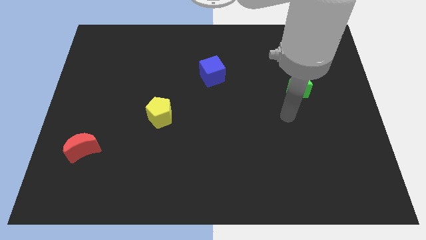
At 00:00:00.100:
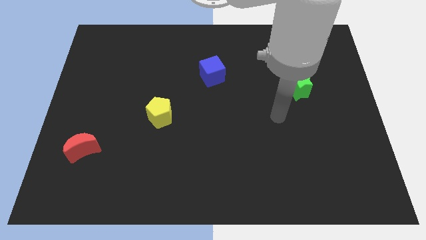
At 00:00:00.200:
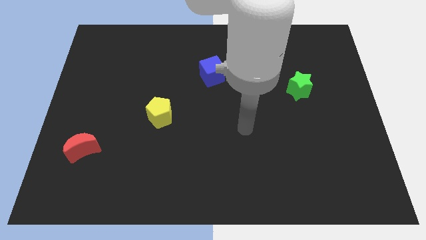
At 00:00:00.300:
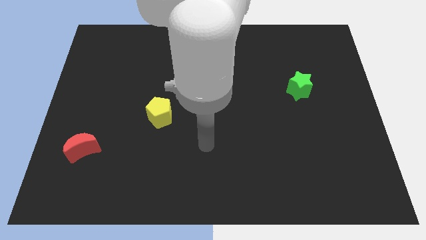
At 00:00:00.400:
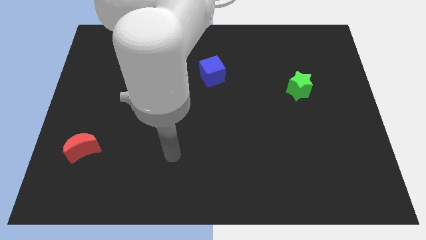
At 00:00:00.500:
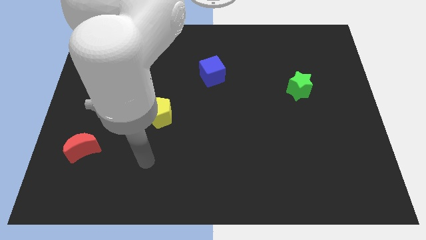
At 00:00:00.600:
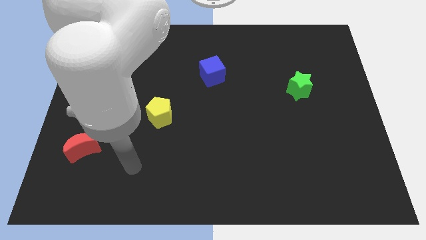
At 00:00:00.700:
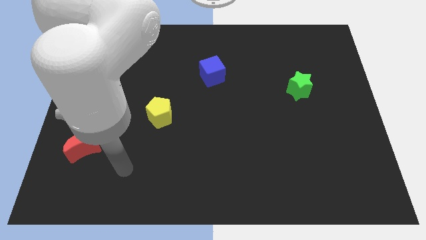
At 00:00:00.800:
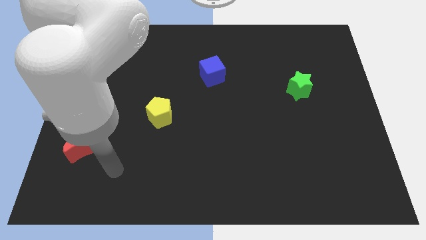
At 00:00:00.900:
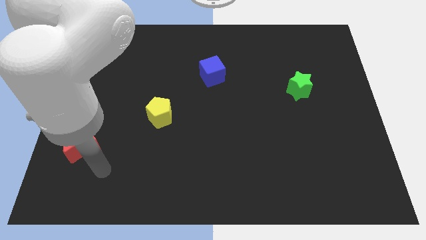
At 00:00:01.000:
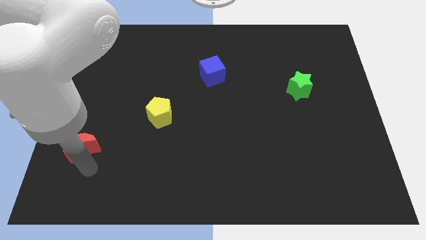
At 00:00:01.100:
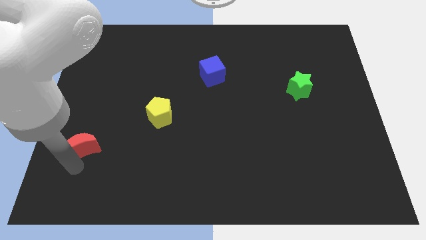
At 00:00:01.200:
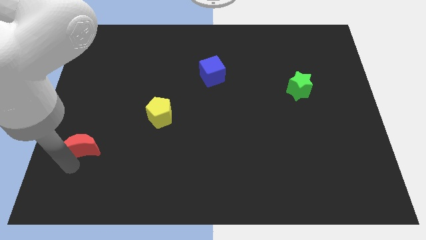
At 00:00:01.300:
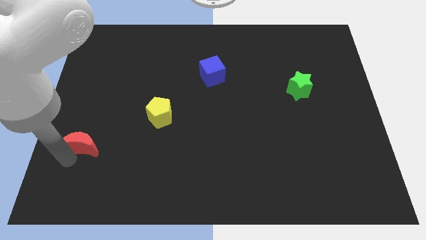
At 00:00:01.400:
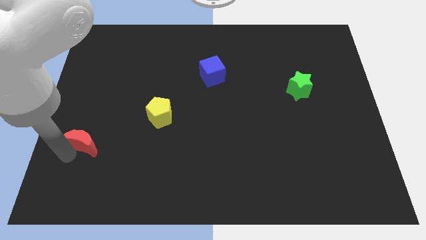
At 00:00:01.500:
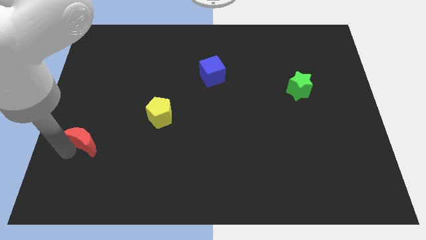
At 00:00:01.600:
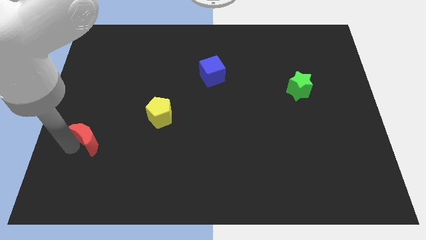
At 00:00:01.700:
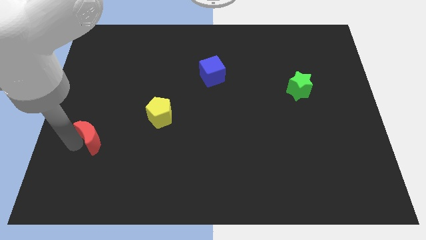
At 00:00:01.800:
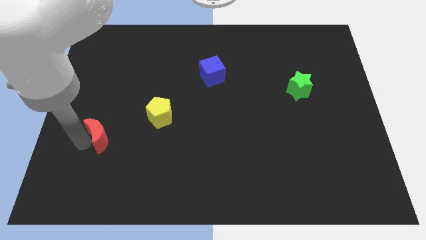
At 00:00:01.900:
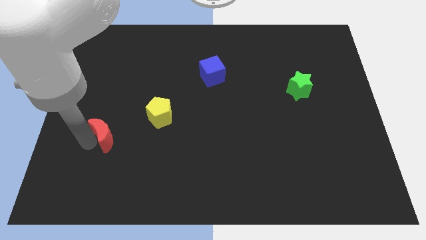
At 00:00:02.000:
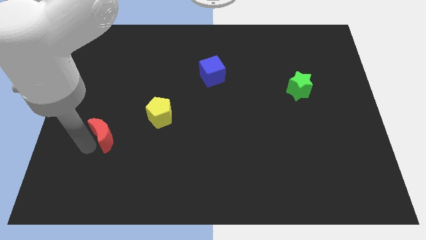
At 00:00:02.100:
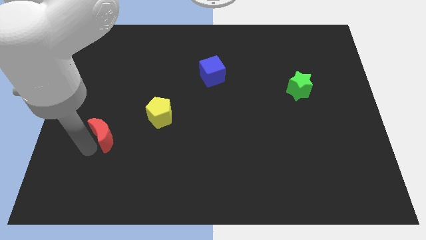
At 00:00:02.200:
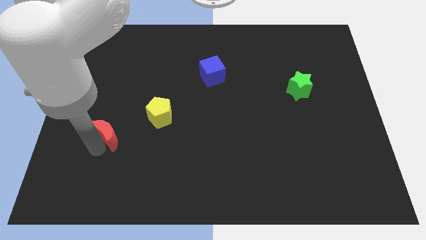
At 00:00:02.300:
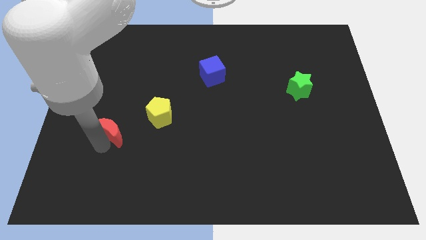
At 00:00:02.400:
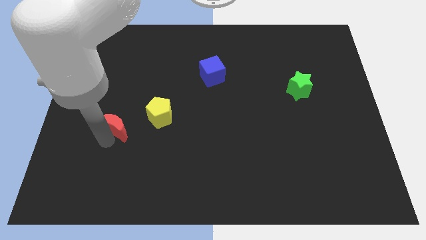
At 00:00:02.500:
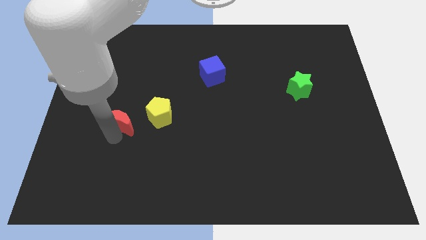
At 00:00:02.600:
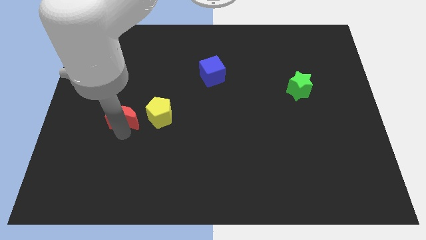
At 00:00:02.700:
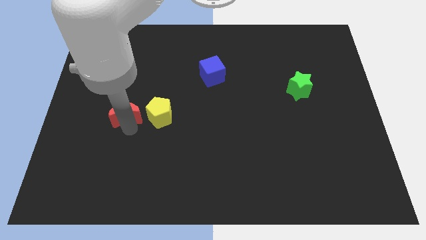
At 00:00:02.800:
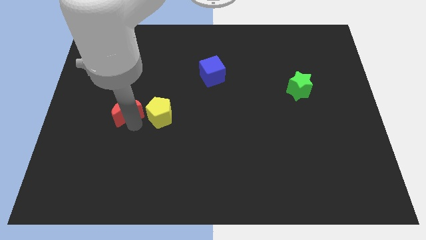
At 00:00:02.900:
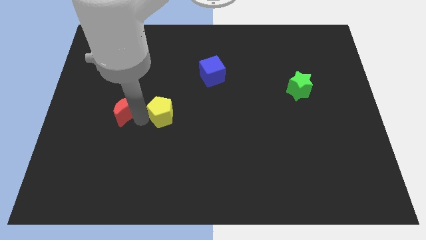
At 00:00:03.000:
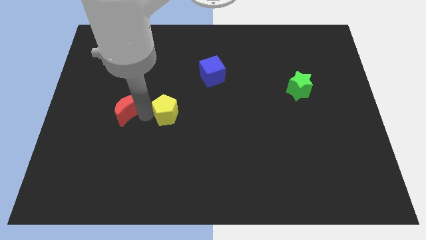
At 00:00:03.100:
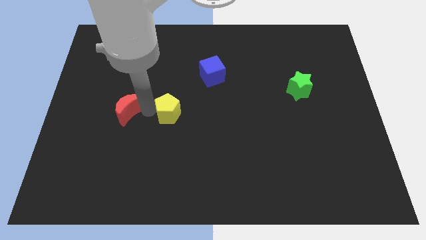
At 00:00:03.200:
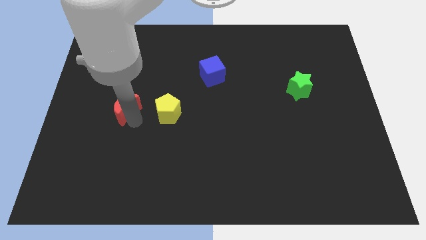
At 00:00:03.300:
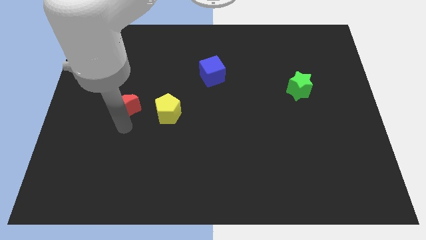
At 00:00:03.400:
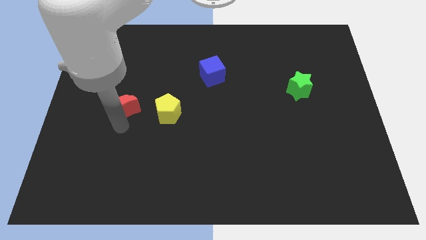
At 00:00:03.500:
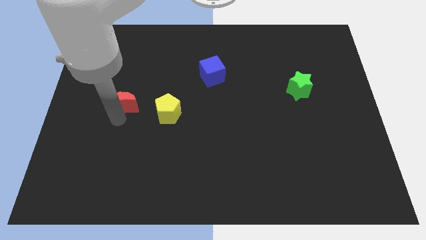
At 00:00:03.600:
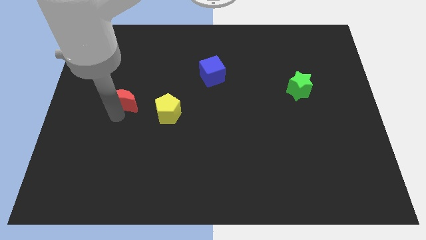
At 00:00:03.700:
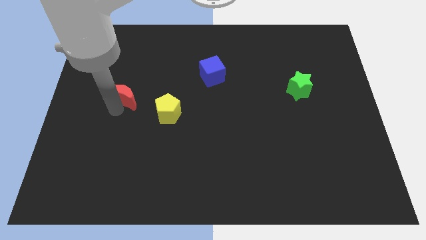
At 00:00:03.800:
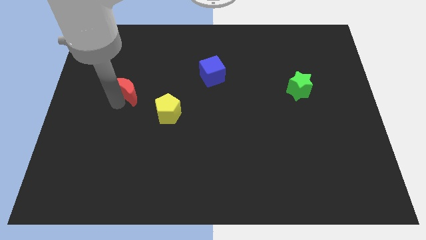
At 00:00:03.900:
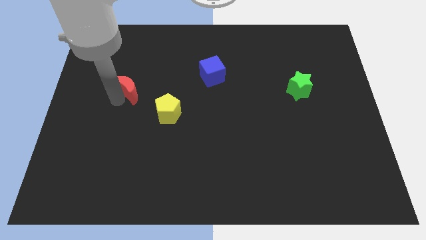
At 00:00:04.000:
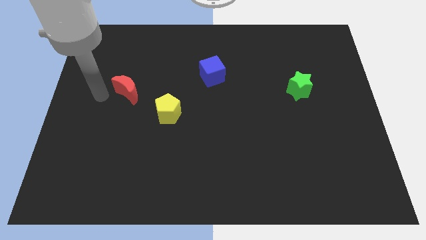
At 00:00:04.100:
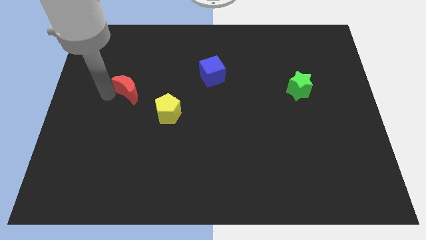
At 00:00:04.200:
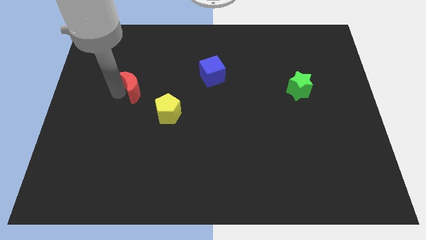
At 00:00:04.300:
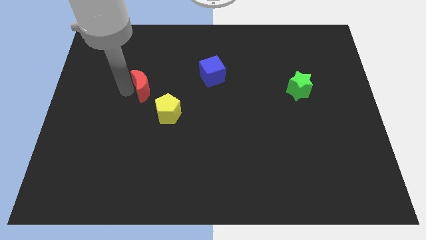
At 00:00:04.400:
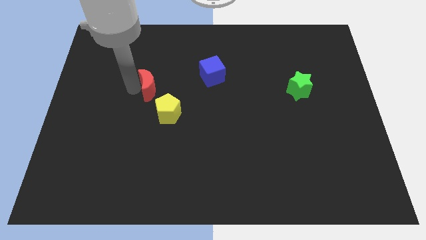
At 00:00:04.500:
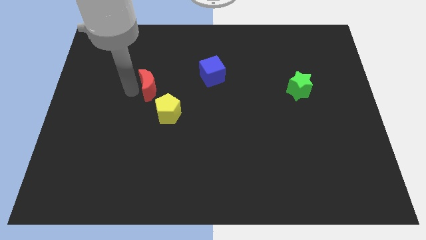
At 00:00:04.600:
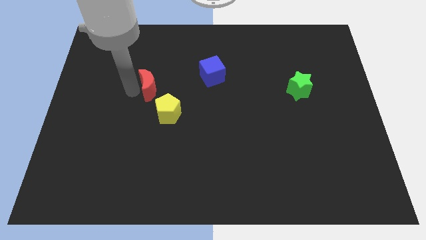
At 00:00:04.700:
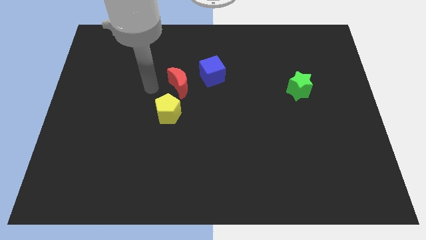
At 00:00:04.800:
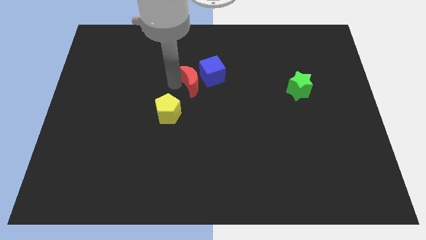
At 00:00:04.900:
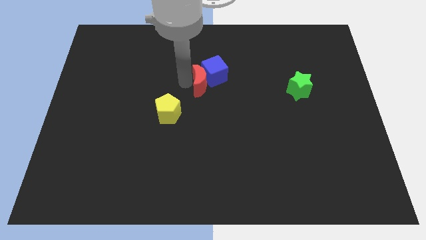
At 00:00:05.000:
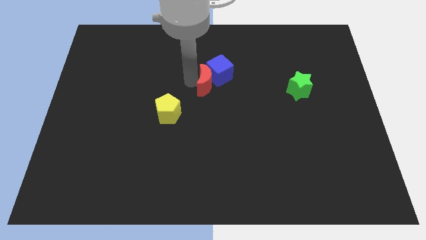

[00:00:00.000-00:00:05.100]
move the red block close to the blue cube

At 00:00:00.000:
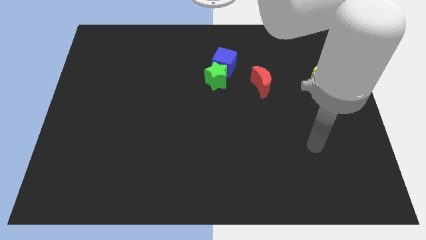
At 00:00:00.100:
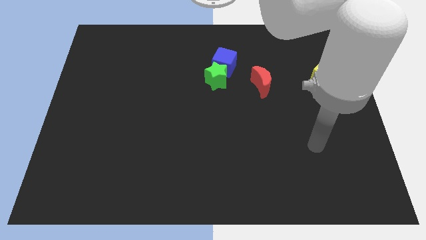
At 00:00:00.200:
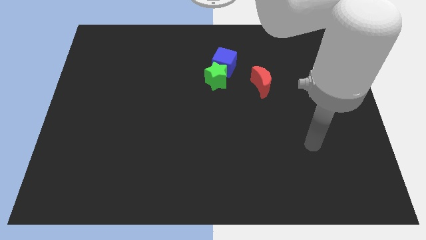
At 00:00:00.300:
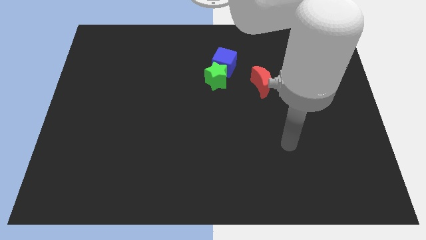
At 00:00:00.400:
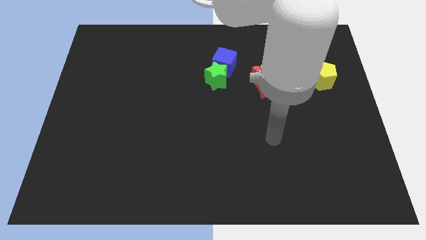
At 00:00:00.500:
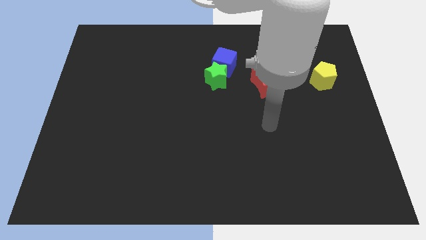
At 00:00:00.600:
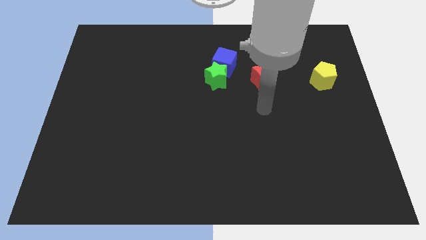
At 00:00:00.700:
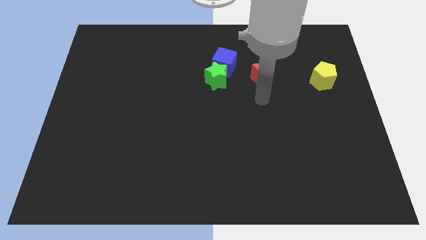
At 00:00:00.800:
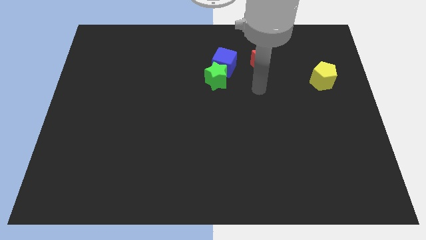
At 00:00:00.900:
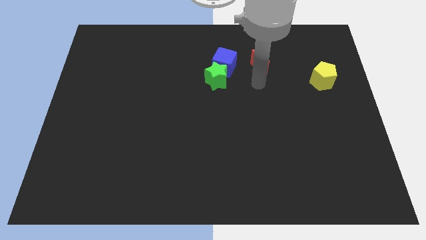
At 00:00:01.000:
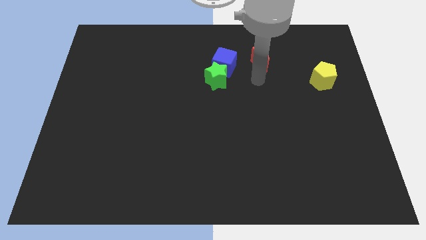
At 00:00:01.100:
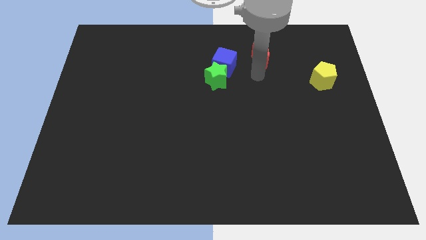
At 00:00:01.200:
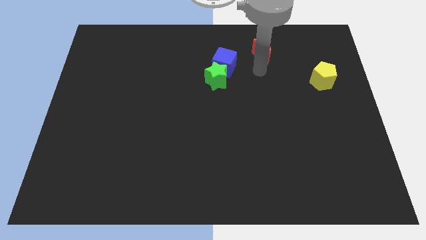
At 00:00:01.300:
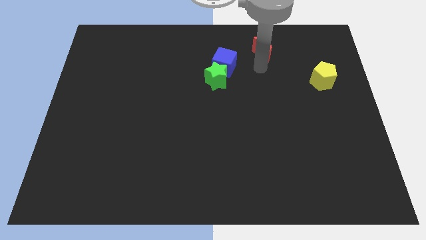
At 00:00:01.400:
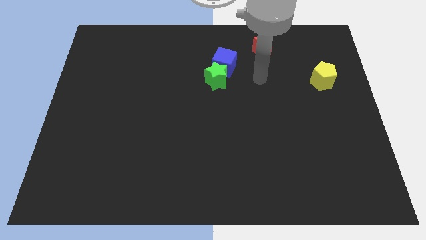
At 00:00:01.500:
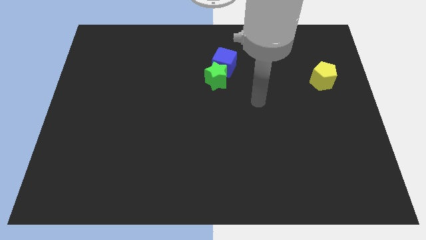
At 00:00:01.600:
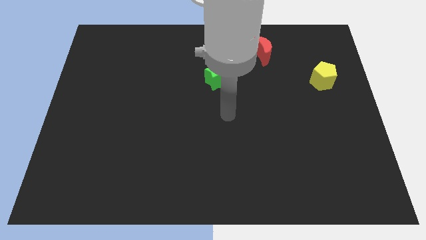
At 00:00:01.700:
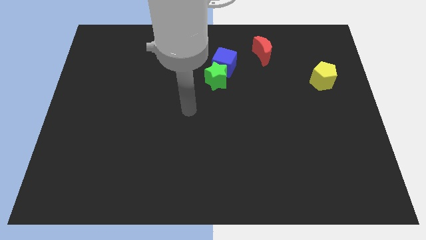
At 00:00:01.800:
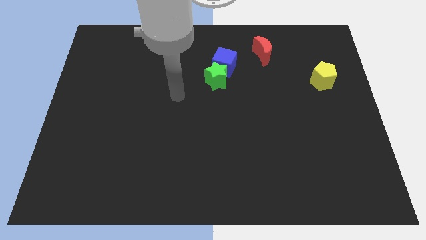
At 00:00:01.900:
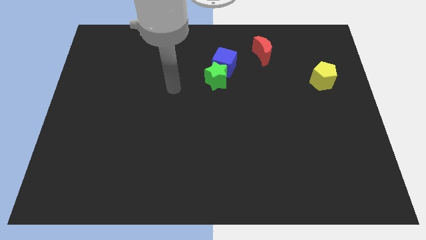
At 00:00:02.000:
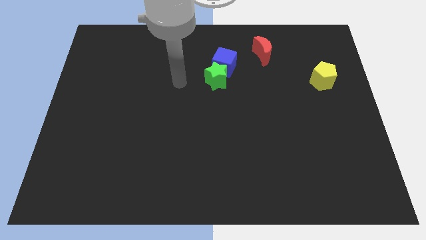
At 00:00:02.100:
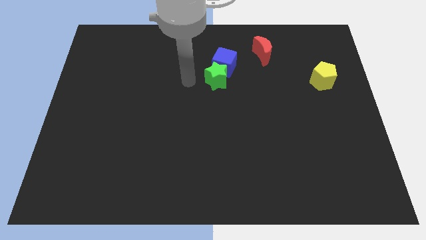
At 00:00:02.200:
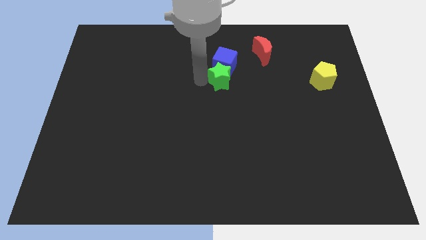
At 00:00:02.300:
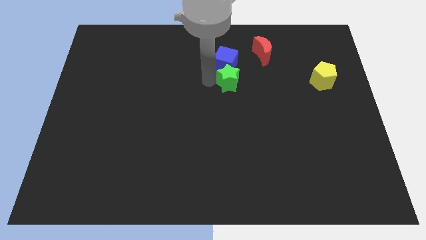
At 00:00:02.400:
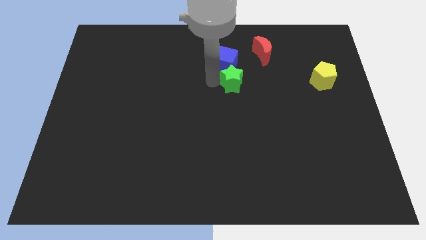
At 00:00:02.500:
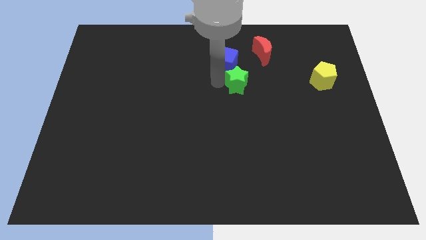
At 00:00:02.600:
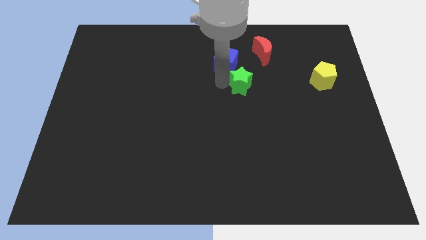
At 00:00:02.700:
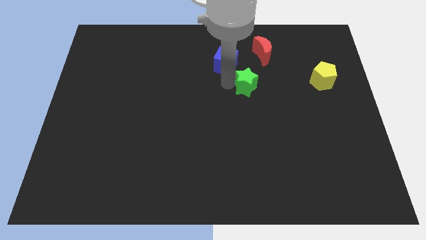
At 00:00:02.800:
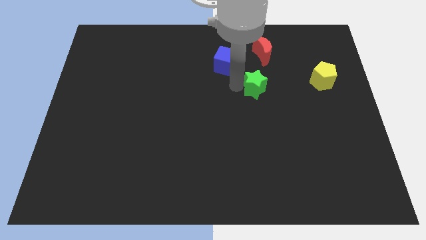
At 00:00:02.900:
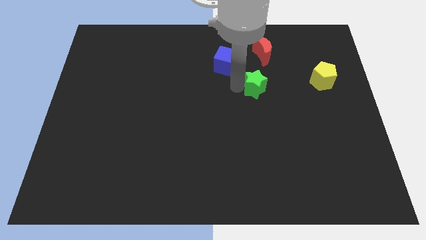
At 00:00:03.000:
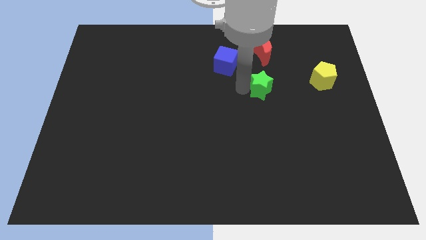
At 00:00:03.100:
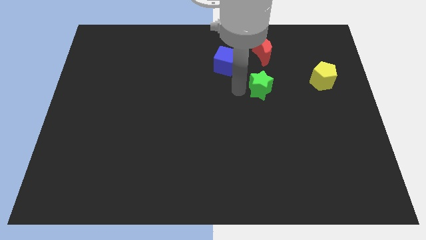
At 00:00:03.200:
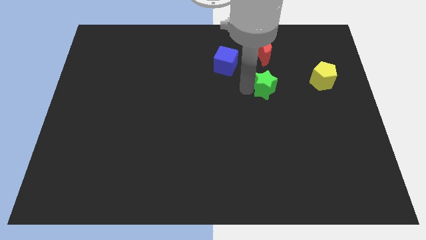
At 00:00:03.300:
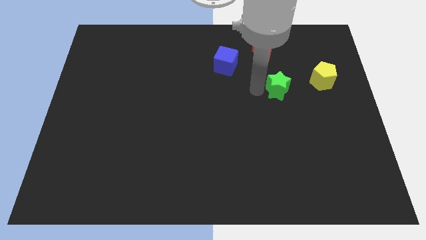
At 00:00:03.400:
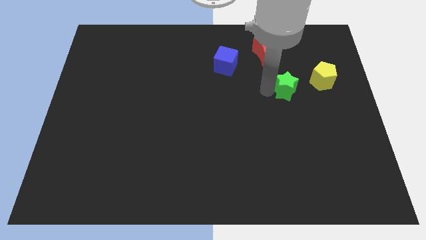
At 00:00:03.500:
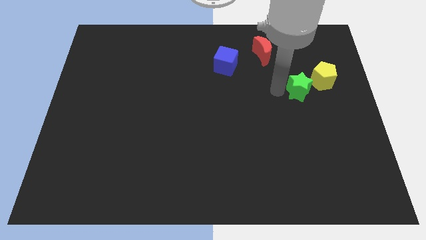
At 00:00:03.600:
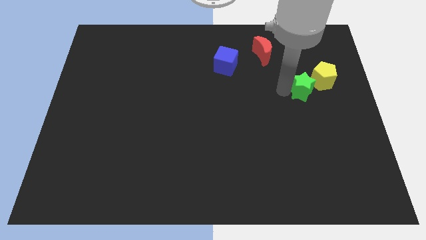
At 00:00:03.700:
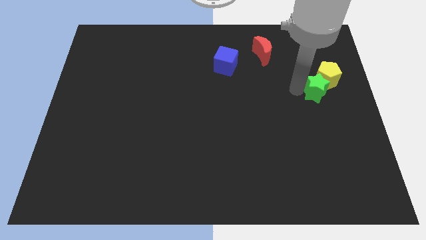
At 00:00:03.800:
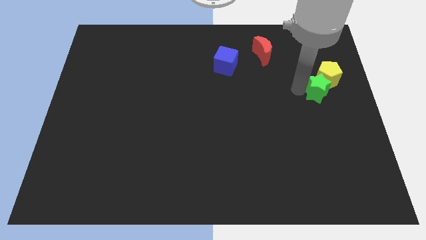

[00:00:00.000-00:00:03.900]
slide the green block close to the pentagon
